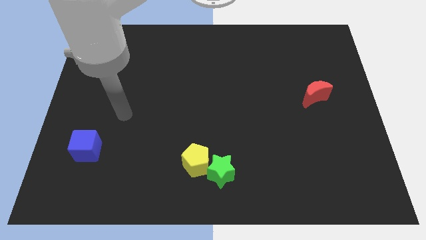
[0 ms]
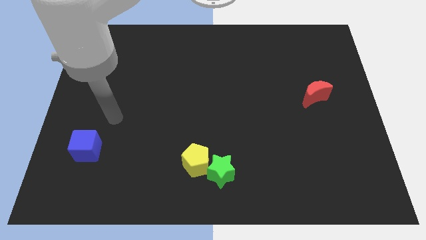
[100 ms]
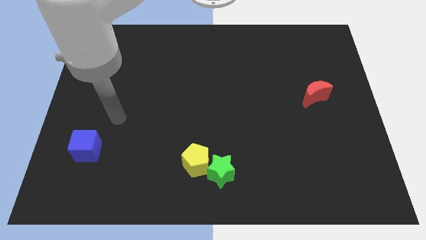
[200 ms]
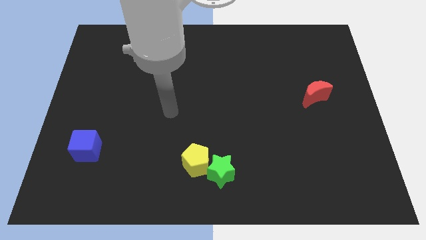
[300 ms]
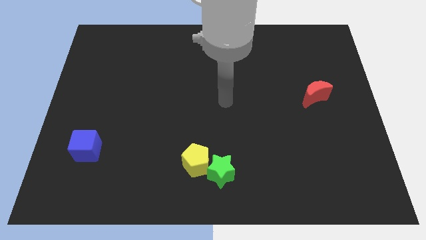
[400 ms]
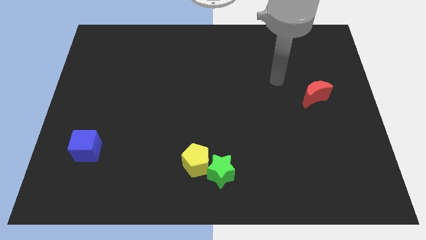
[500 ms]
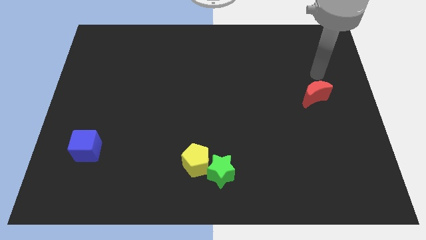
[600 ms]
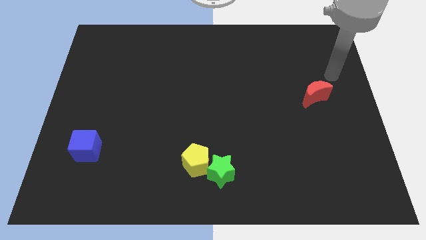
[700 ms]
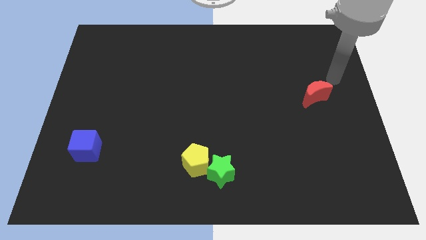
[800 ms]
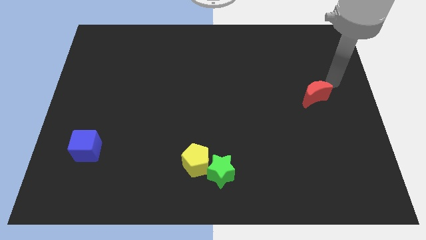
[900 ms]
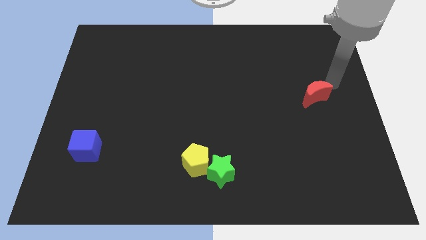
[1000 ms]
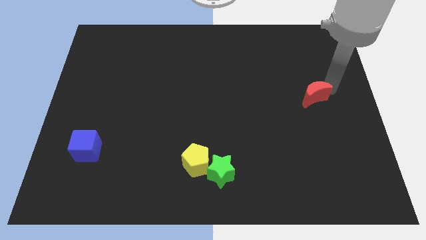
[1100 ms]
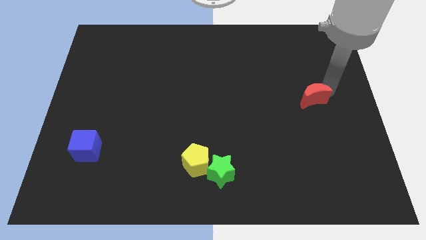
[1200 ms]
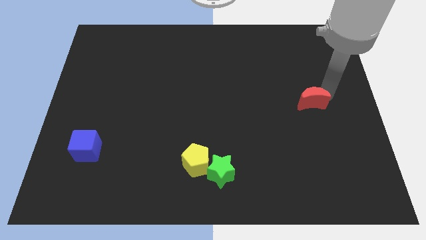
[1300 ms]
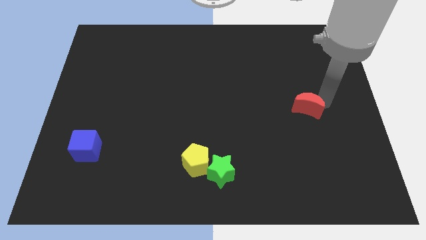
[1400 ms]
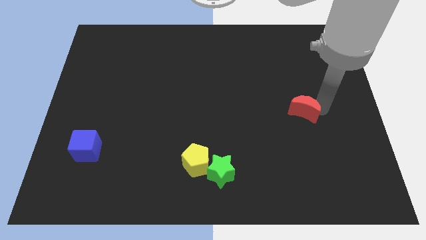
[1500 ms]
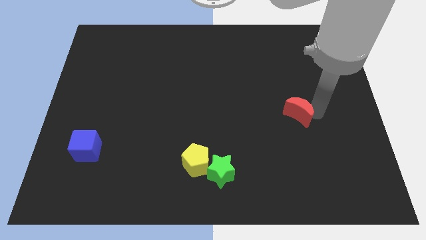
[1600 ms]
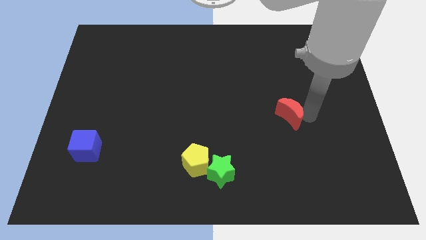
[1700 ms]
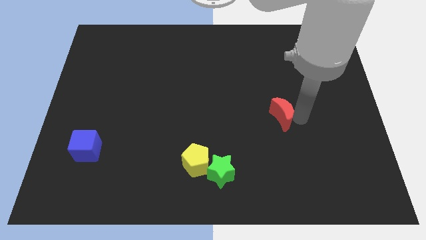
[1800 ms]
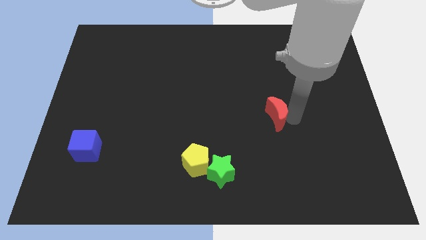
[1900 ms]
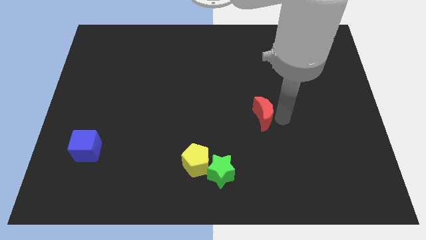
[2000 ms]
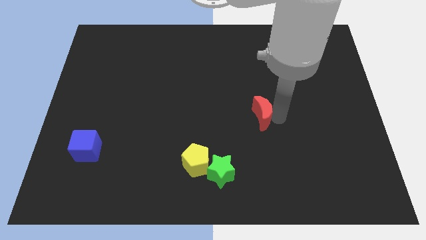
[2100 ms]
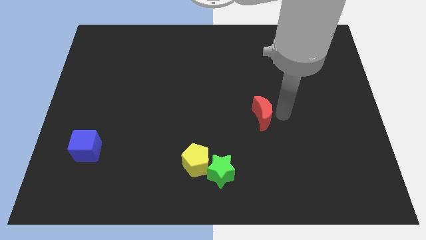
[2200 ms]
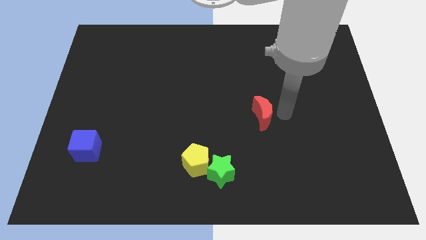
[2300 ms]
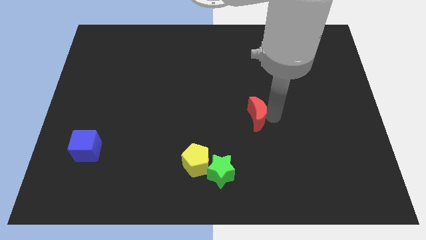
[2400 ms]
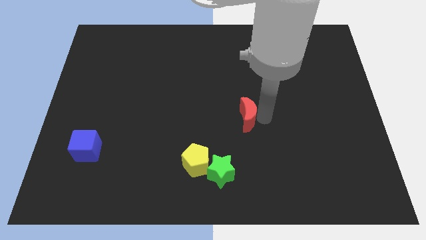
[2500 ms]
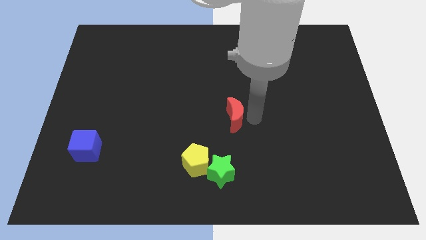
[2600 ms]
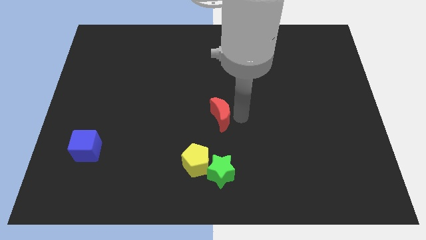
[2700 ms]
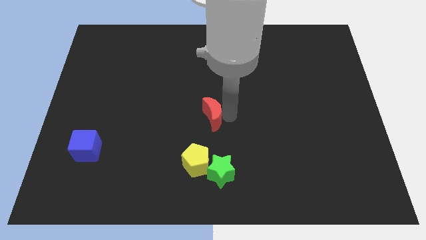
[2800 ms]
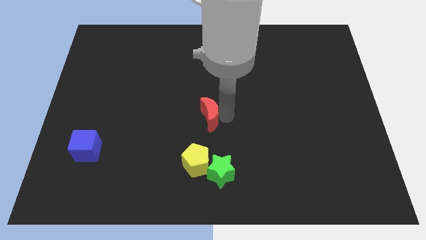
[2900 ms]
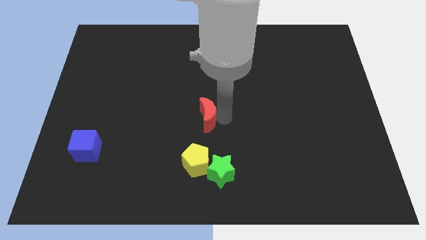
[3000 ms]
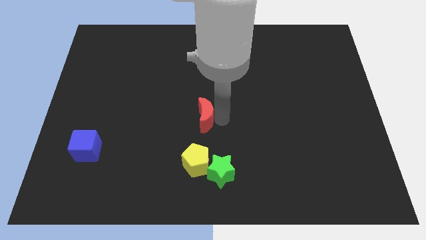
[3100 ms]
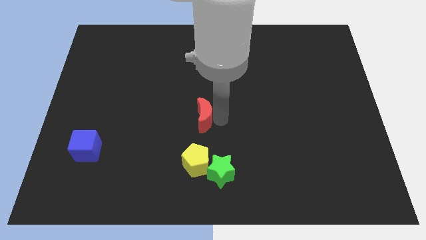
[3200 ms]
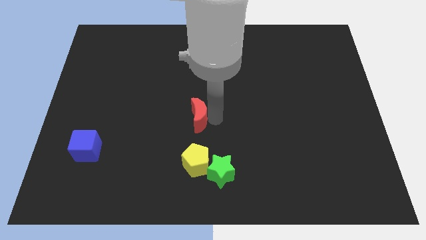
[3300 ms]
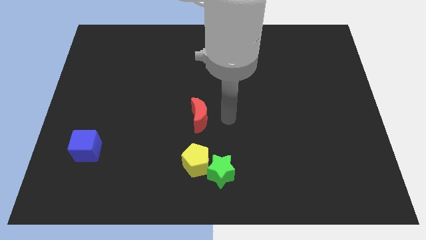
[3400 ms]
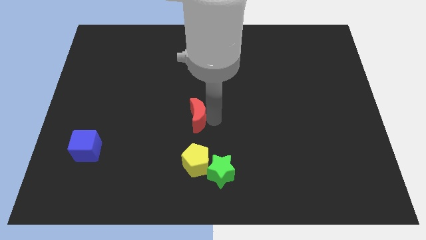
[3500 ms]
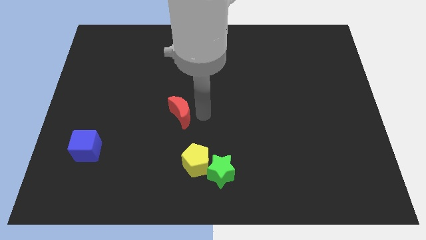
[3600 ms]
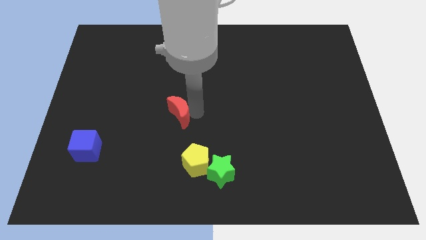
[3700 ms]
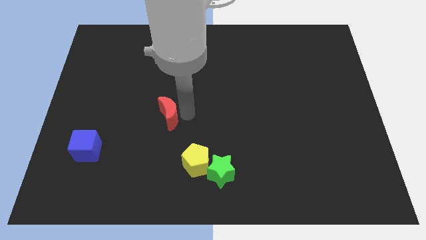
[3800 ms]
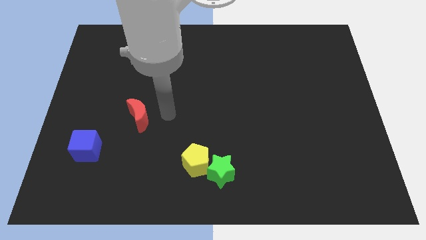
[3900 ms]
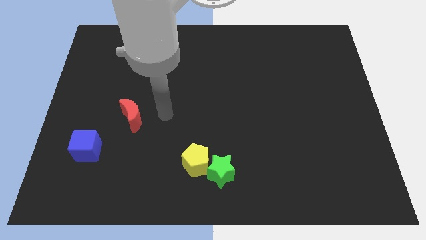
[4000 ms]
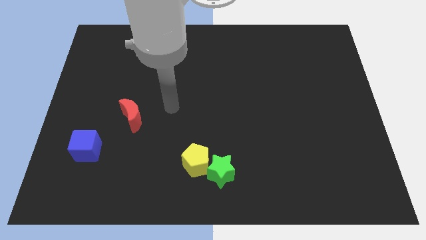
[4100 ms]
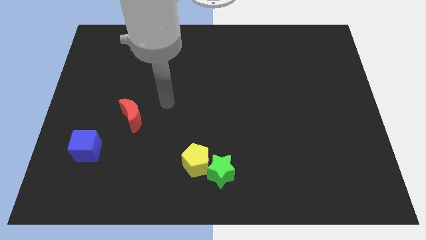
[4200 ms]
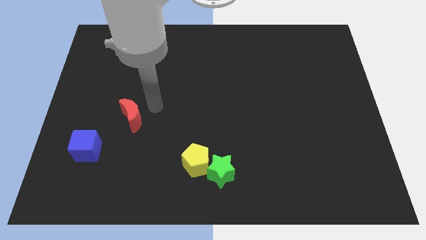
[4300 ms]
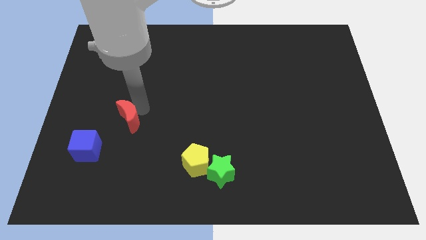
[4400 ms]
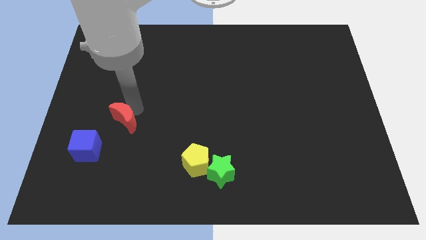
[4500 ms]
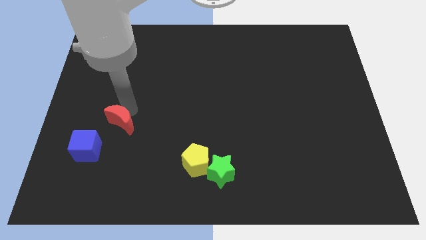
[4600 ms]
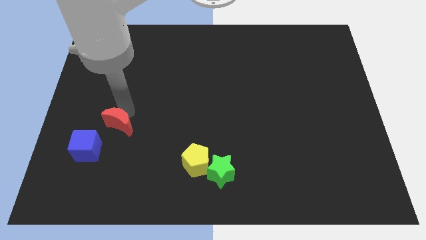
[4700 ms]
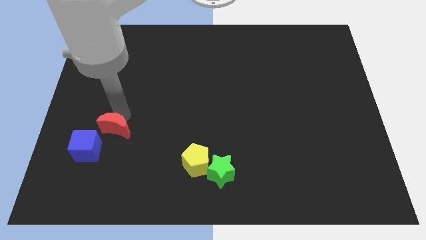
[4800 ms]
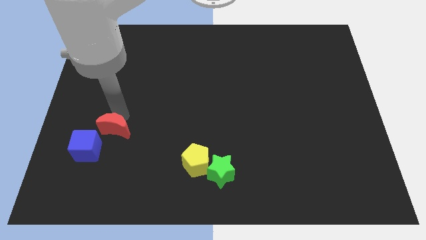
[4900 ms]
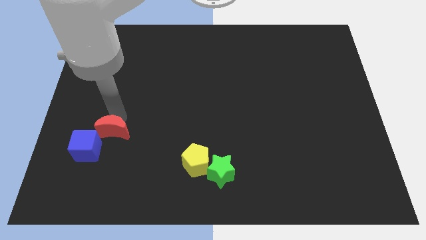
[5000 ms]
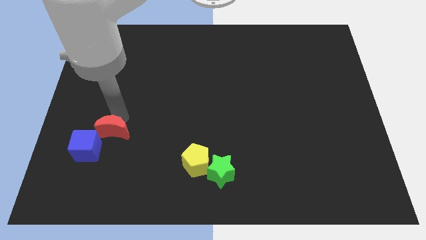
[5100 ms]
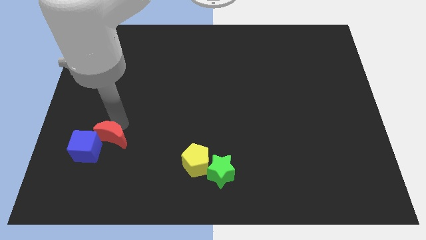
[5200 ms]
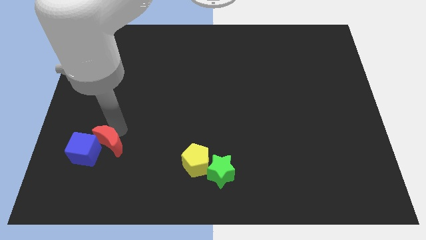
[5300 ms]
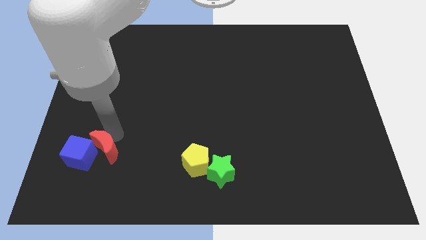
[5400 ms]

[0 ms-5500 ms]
slide the moon close to the cube

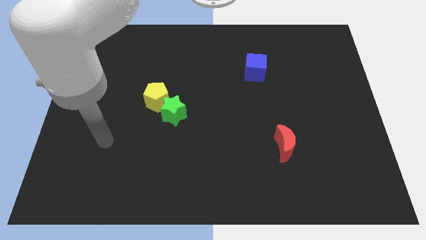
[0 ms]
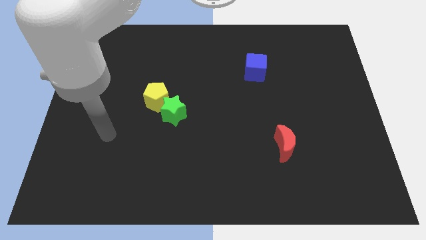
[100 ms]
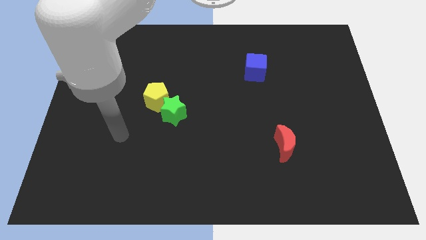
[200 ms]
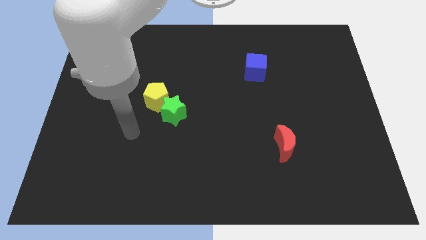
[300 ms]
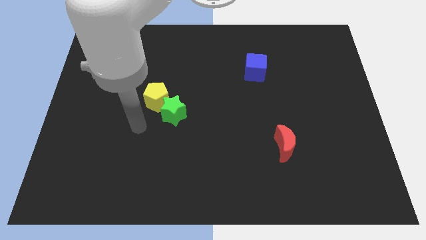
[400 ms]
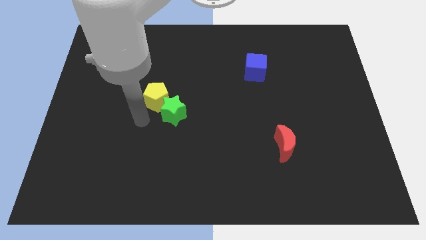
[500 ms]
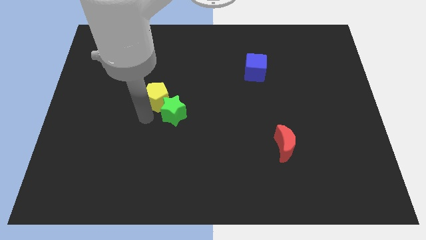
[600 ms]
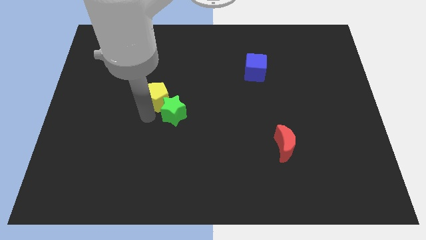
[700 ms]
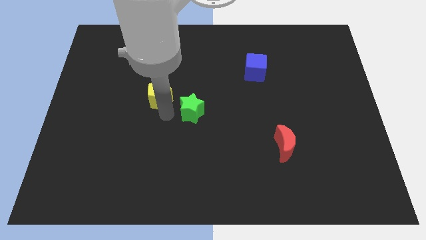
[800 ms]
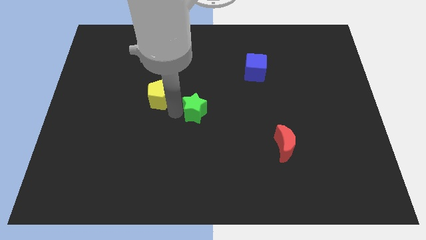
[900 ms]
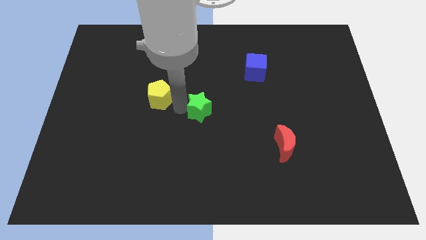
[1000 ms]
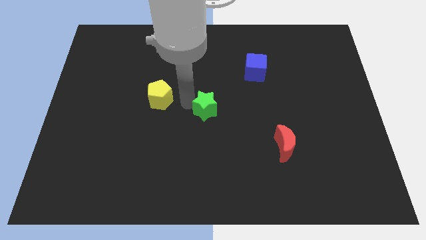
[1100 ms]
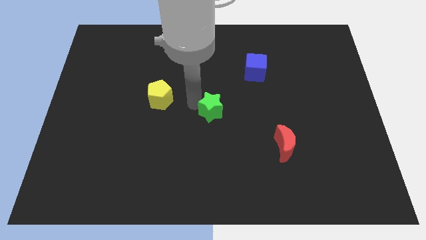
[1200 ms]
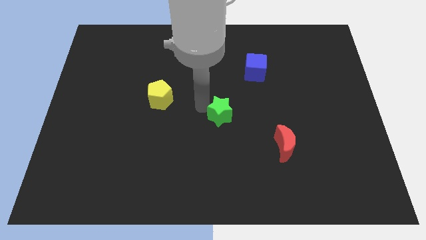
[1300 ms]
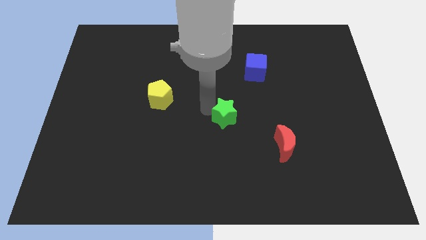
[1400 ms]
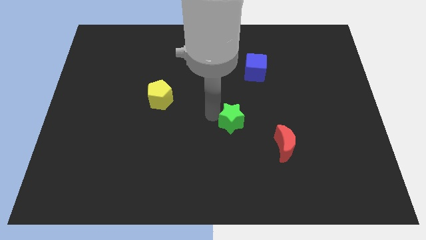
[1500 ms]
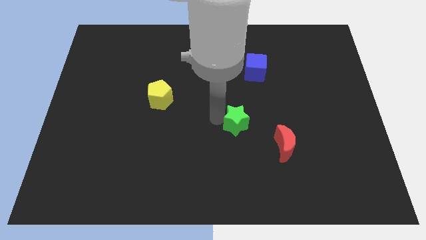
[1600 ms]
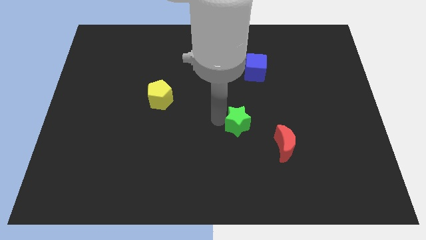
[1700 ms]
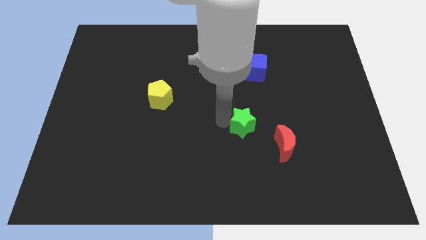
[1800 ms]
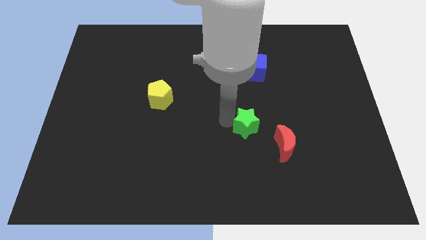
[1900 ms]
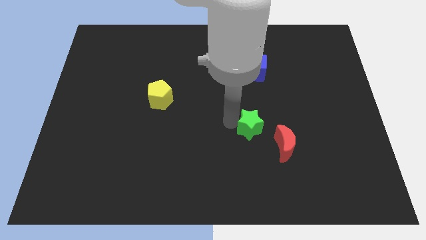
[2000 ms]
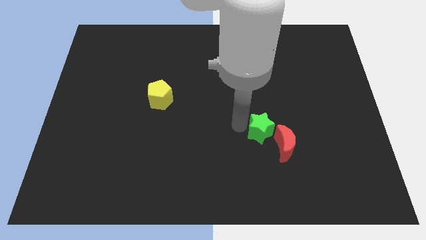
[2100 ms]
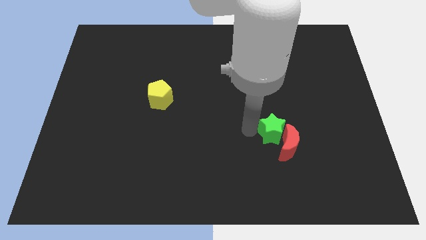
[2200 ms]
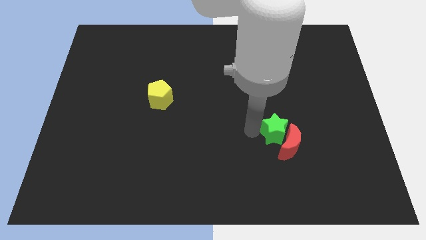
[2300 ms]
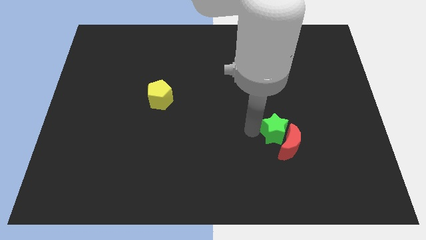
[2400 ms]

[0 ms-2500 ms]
slide the green block towards the red block

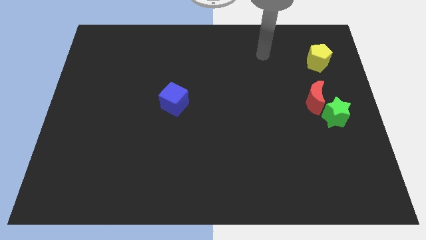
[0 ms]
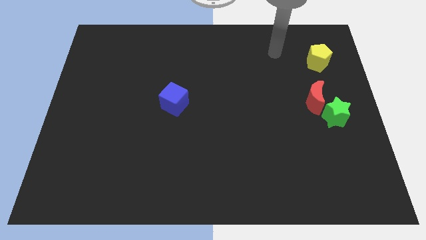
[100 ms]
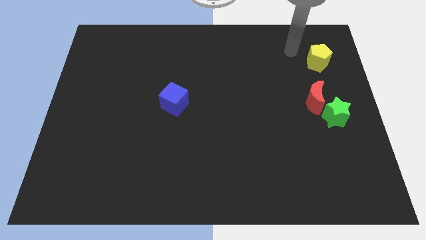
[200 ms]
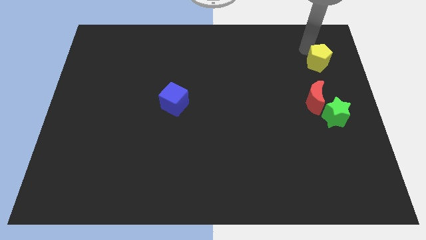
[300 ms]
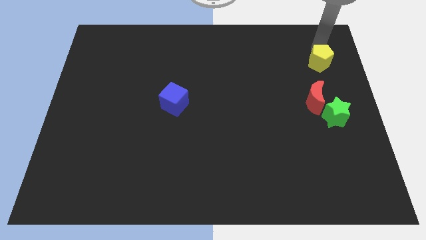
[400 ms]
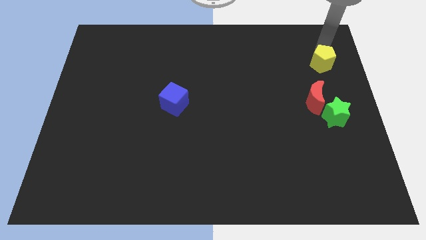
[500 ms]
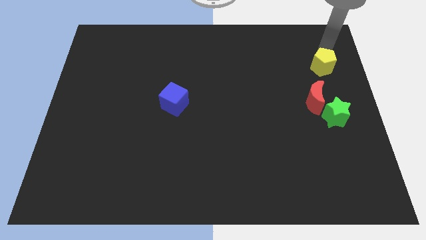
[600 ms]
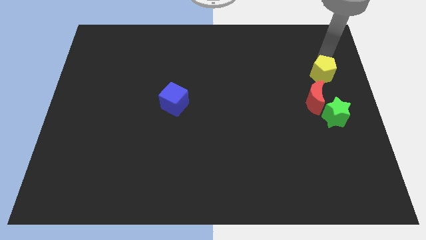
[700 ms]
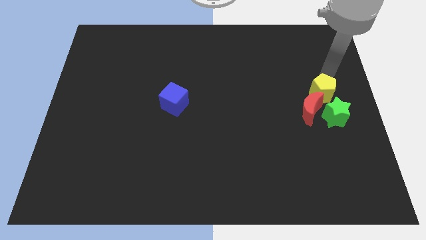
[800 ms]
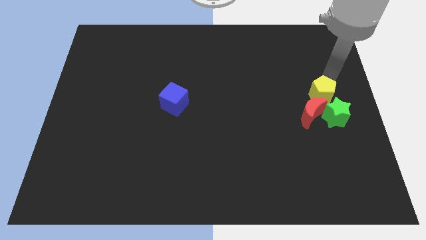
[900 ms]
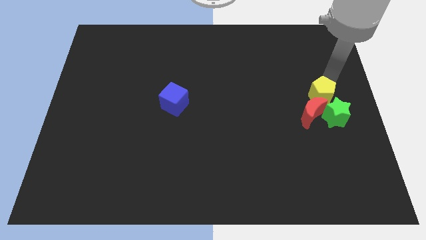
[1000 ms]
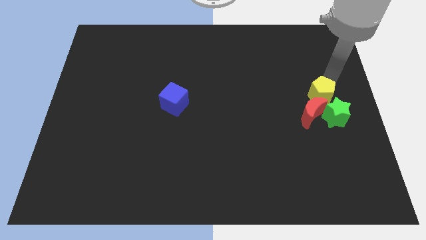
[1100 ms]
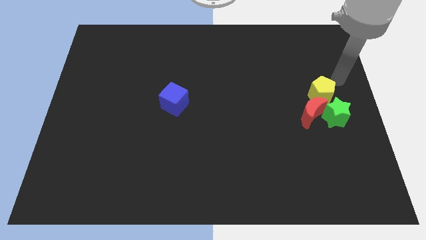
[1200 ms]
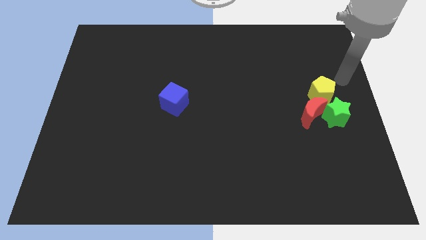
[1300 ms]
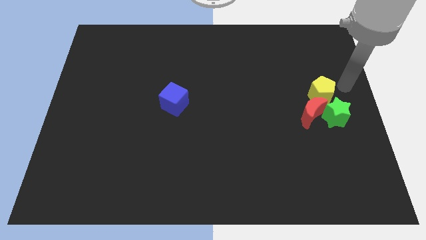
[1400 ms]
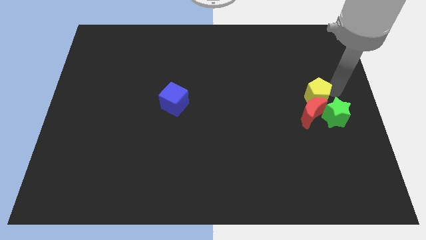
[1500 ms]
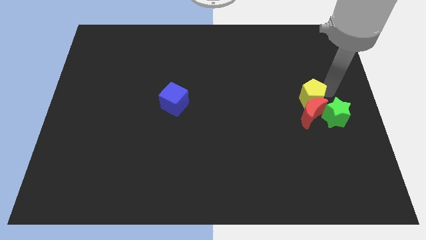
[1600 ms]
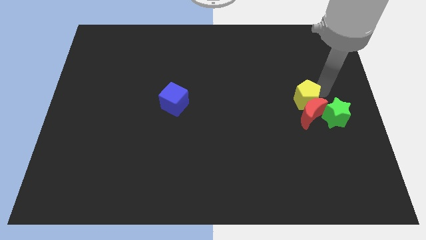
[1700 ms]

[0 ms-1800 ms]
slide the yellow block towards the moon
